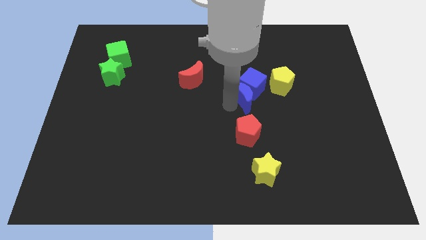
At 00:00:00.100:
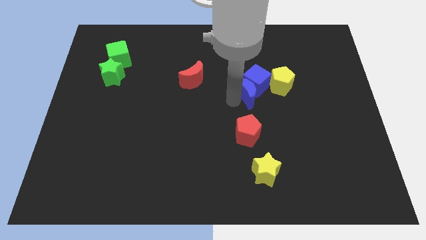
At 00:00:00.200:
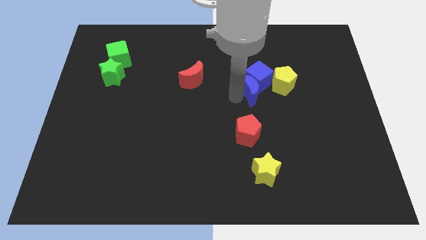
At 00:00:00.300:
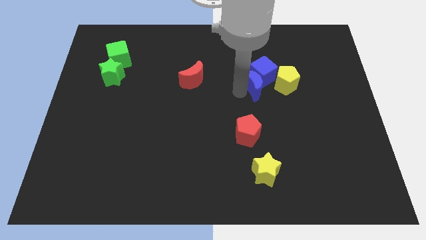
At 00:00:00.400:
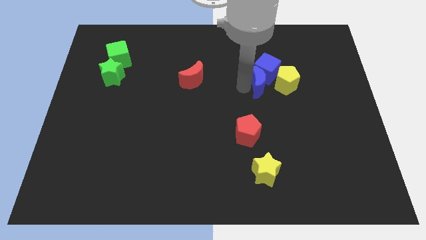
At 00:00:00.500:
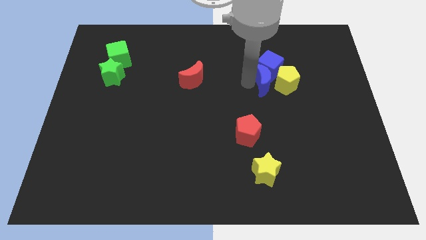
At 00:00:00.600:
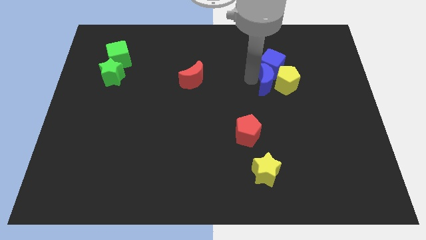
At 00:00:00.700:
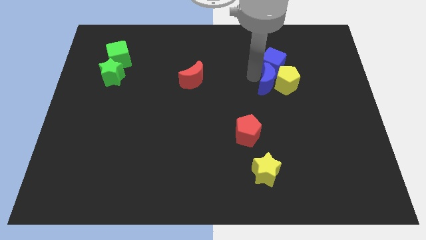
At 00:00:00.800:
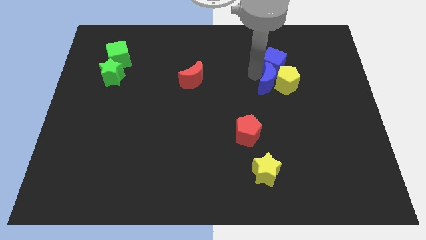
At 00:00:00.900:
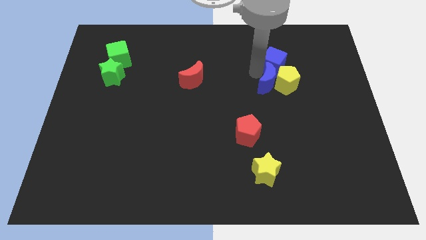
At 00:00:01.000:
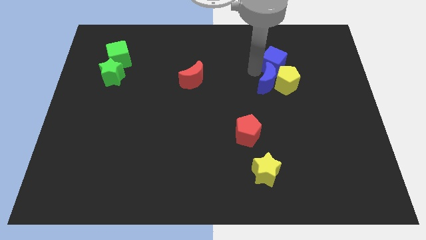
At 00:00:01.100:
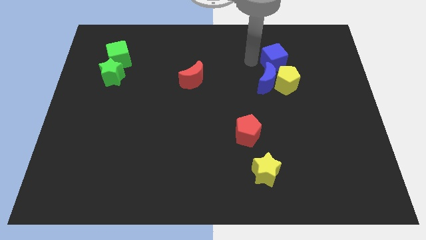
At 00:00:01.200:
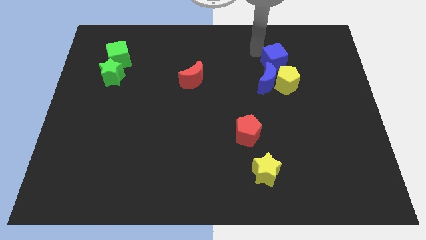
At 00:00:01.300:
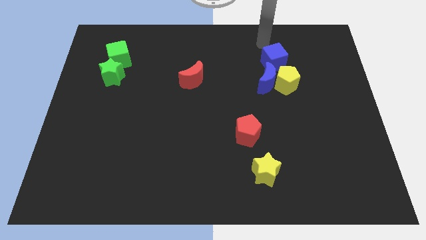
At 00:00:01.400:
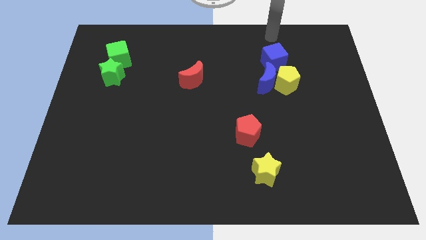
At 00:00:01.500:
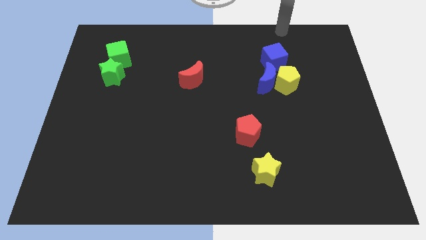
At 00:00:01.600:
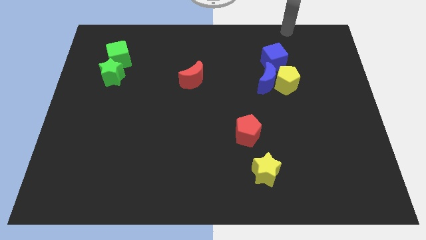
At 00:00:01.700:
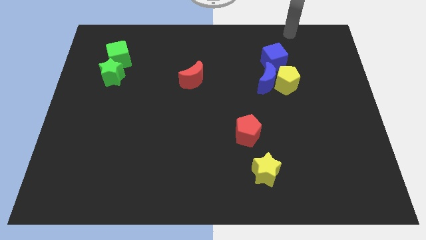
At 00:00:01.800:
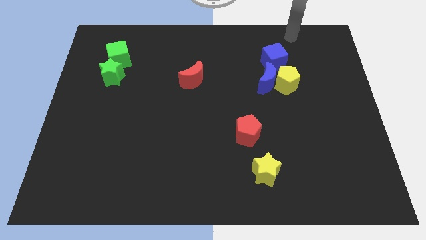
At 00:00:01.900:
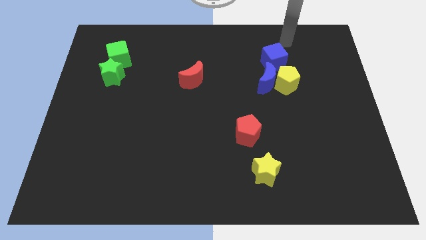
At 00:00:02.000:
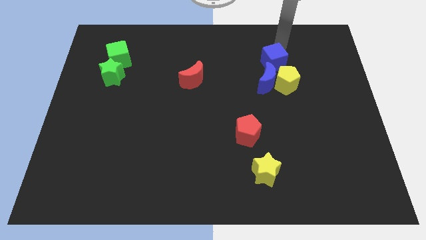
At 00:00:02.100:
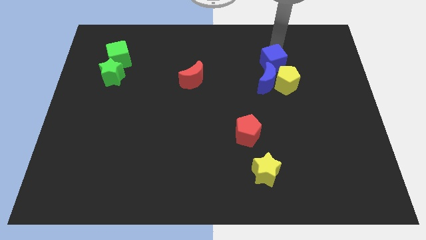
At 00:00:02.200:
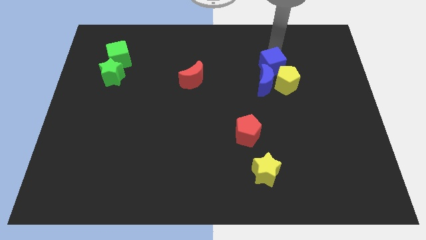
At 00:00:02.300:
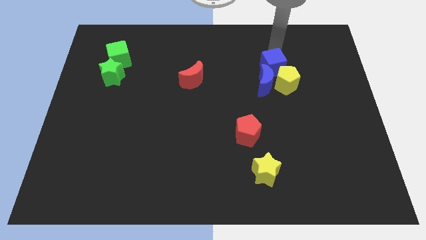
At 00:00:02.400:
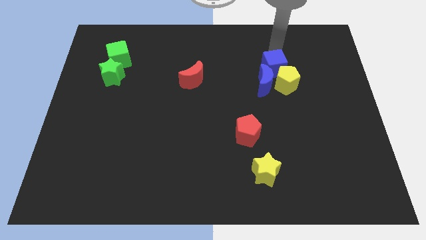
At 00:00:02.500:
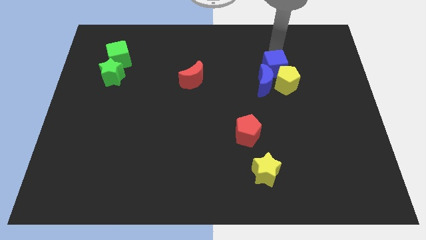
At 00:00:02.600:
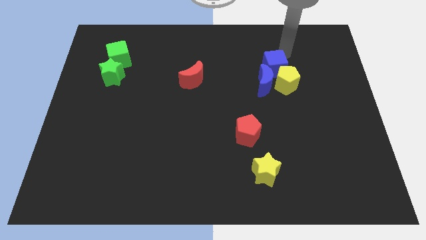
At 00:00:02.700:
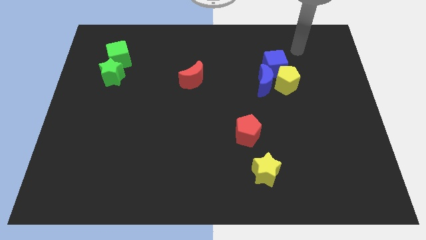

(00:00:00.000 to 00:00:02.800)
push the blue moon and blue cube to the left of the yellow pentagon

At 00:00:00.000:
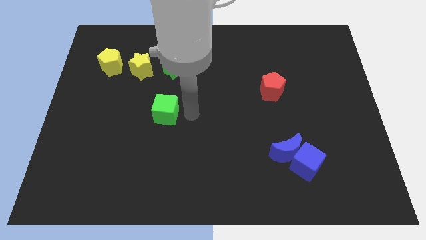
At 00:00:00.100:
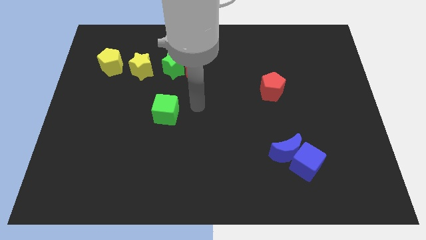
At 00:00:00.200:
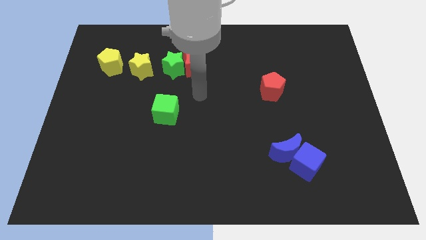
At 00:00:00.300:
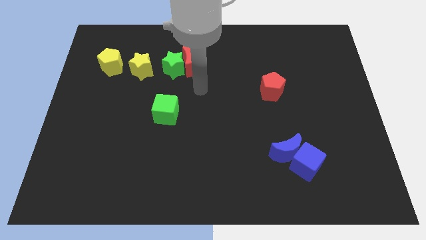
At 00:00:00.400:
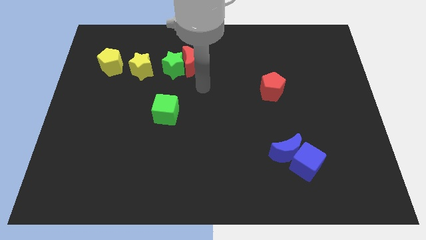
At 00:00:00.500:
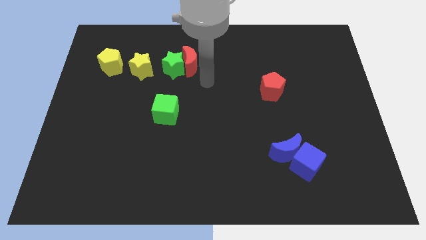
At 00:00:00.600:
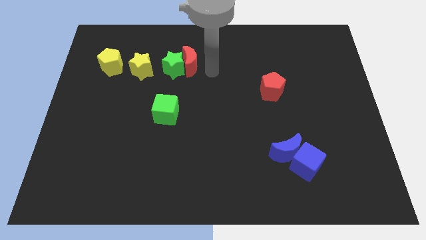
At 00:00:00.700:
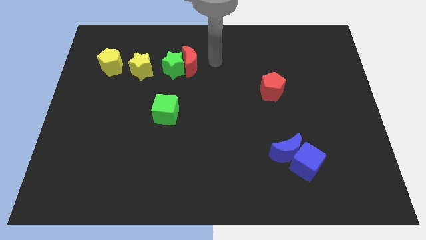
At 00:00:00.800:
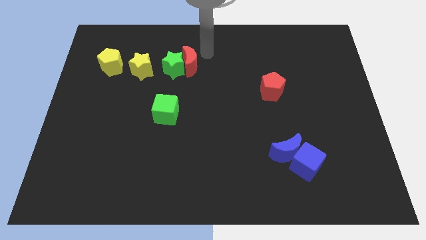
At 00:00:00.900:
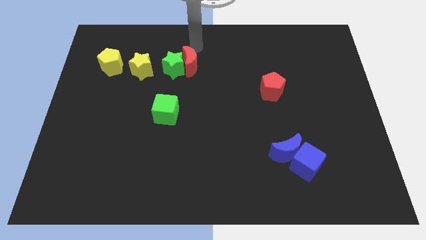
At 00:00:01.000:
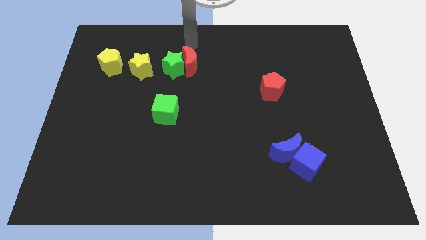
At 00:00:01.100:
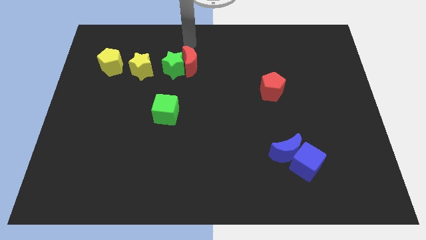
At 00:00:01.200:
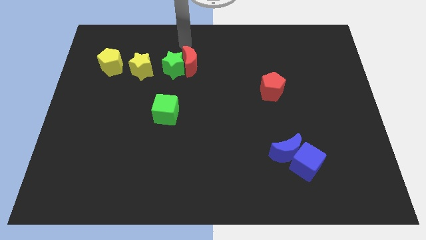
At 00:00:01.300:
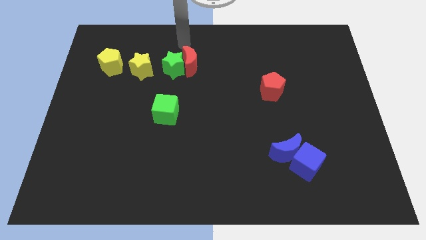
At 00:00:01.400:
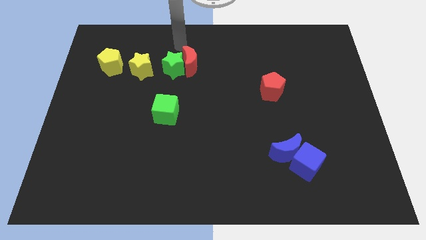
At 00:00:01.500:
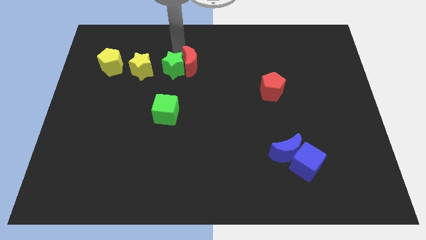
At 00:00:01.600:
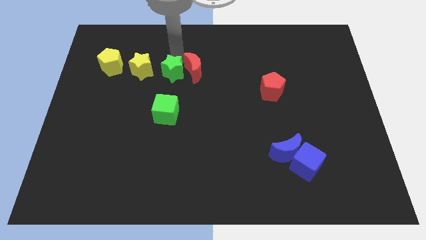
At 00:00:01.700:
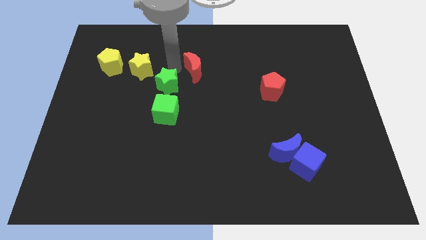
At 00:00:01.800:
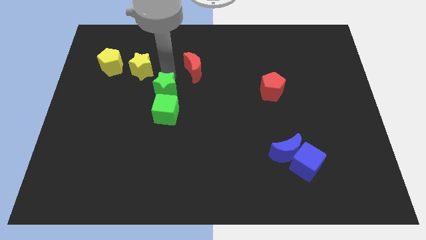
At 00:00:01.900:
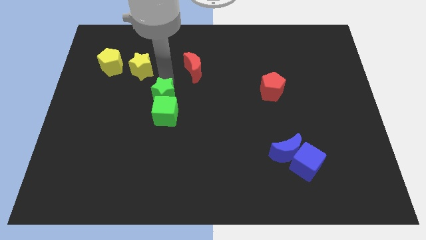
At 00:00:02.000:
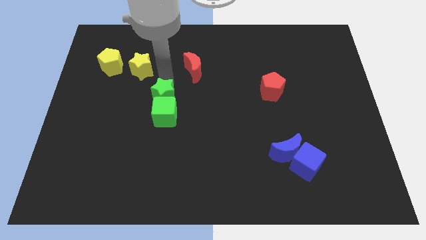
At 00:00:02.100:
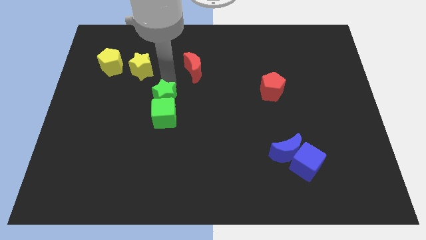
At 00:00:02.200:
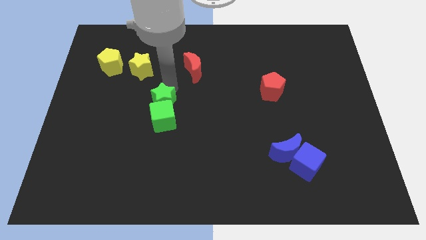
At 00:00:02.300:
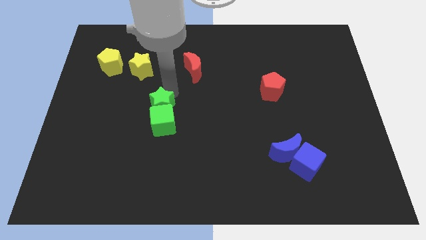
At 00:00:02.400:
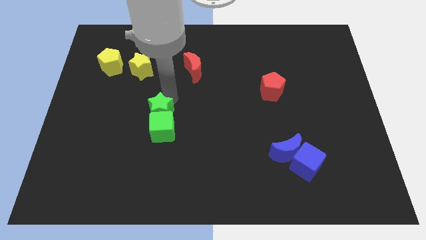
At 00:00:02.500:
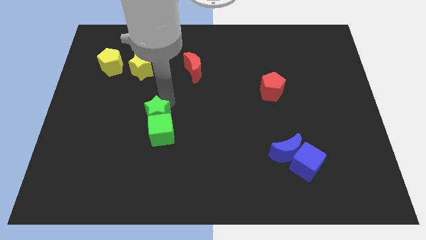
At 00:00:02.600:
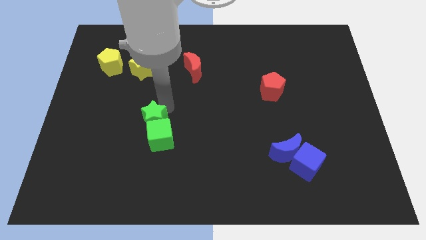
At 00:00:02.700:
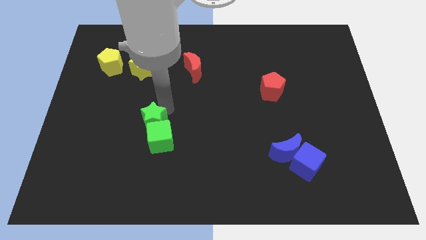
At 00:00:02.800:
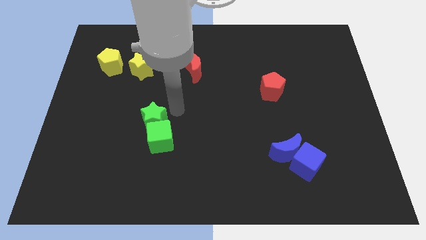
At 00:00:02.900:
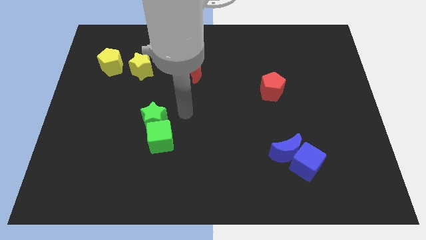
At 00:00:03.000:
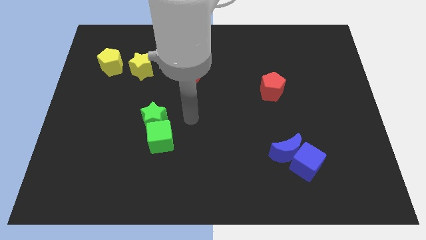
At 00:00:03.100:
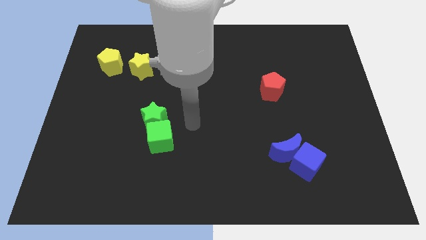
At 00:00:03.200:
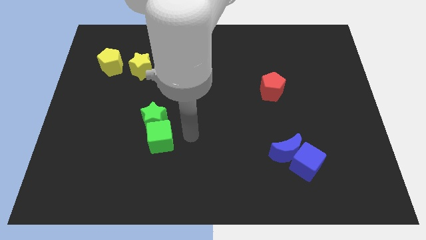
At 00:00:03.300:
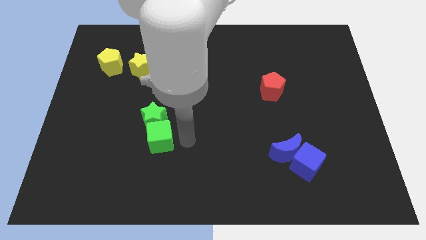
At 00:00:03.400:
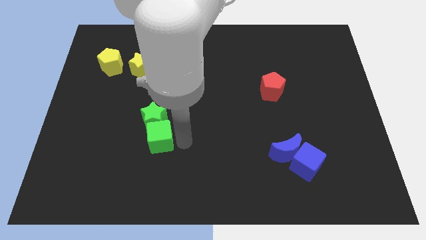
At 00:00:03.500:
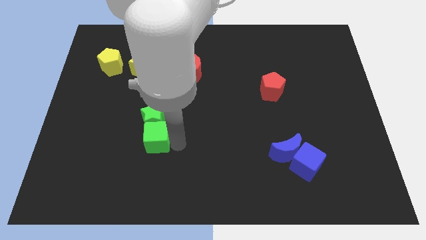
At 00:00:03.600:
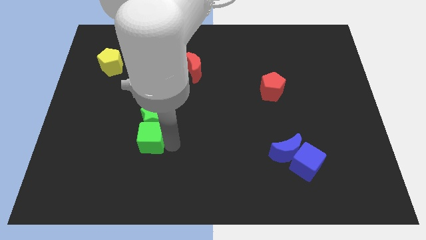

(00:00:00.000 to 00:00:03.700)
push the green star into the green cube

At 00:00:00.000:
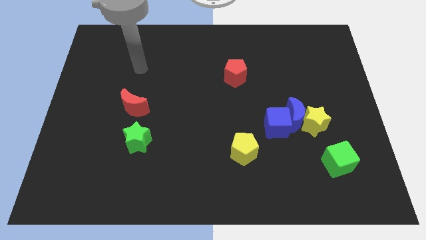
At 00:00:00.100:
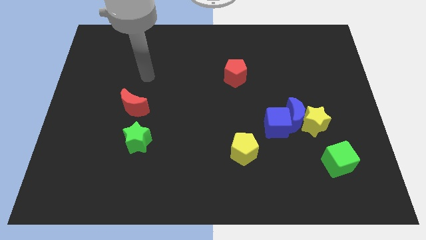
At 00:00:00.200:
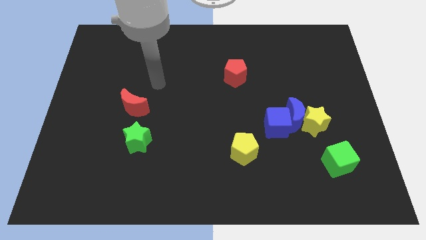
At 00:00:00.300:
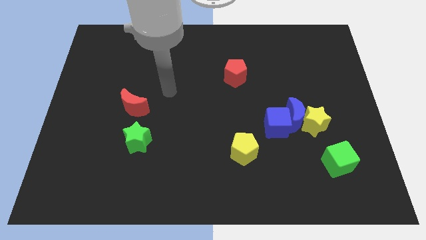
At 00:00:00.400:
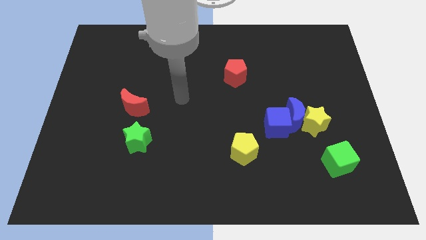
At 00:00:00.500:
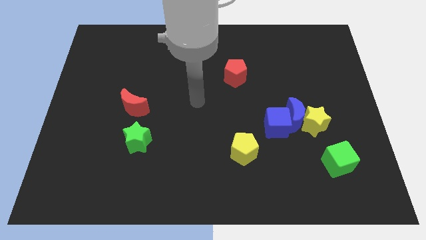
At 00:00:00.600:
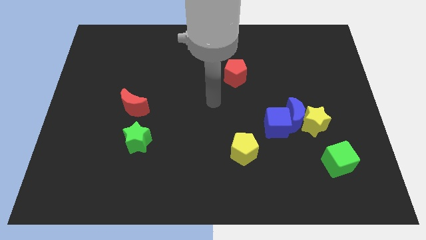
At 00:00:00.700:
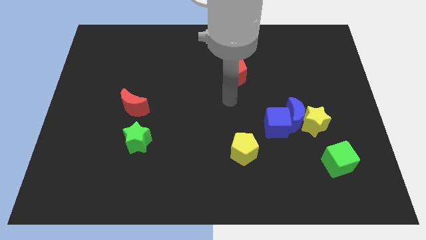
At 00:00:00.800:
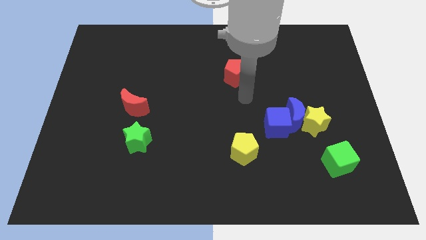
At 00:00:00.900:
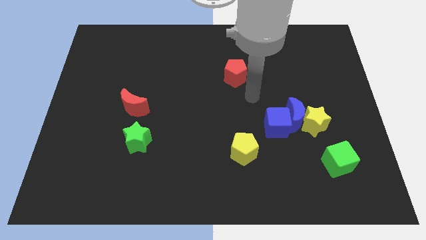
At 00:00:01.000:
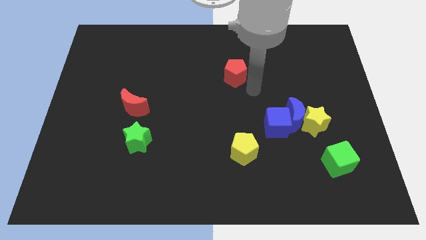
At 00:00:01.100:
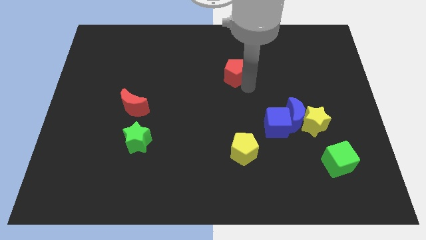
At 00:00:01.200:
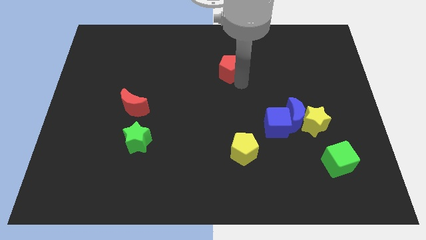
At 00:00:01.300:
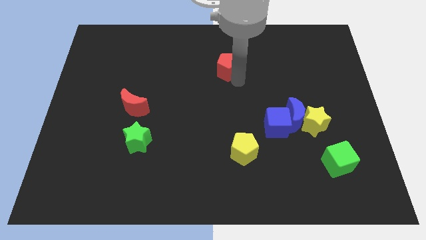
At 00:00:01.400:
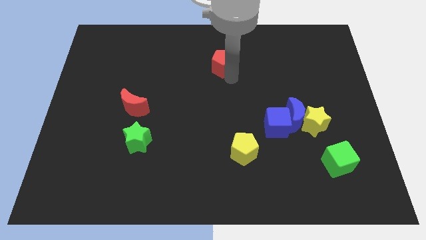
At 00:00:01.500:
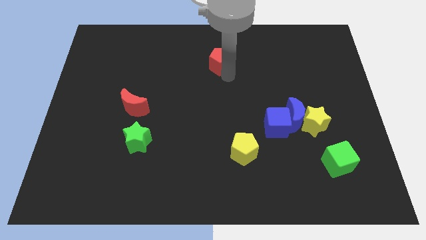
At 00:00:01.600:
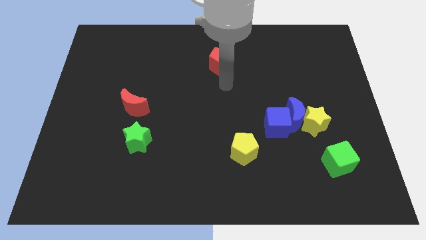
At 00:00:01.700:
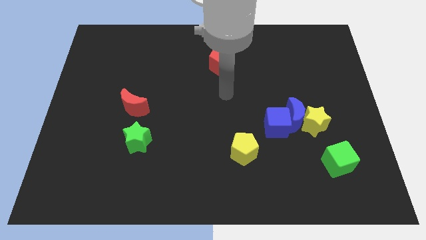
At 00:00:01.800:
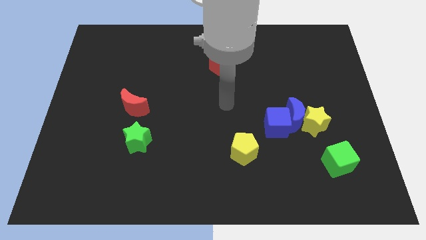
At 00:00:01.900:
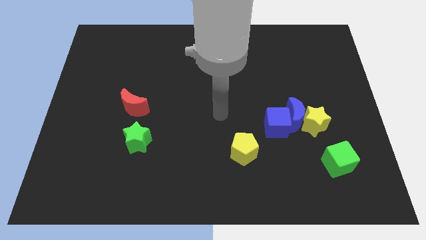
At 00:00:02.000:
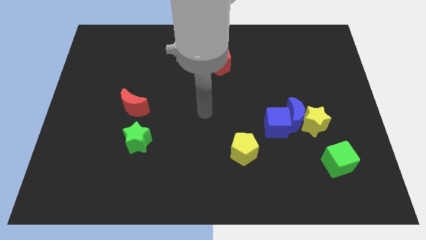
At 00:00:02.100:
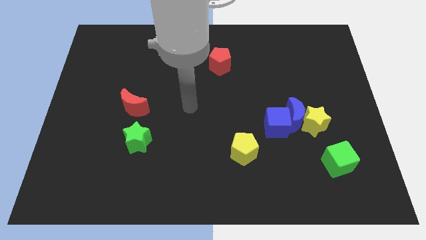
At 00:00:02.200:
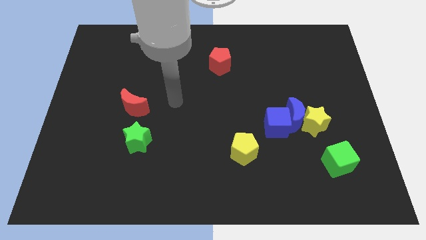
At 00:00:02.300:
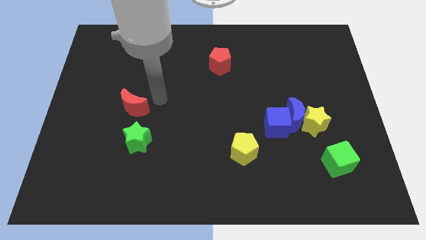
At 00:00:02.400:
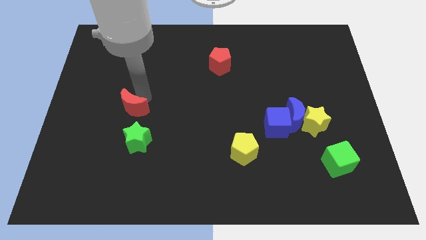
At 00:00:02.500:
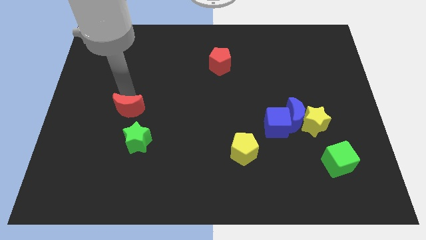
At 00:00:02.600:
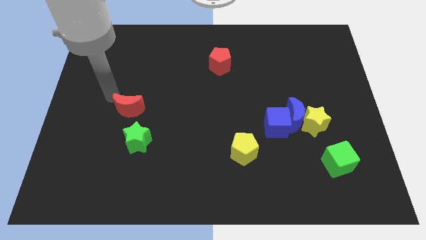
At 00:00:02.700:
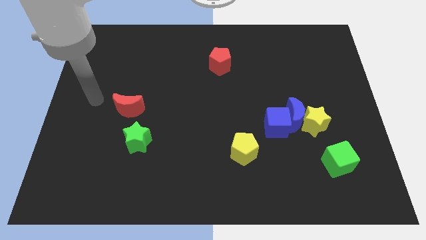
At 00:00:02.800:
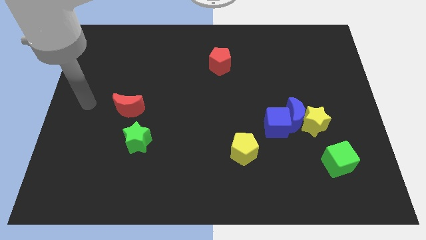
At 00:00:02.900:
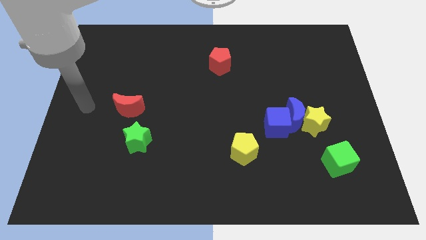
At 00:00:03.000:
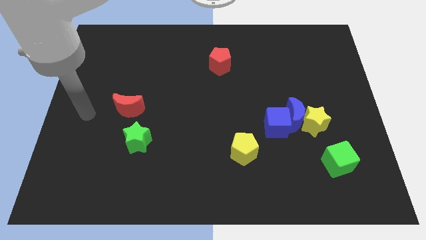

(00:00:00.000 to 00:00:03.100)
move the red pentagon to the top center of the board
